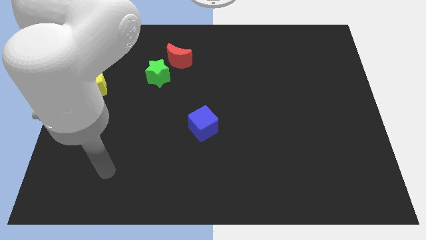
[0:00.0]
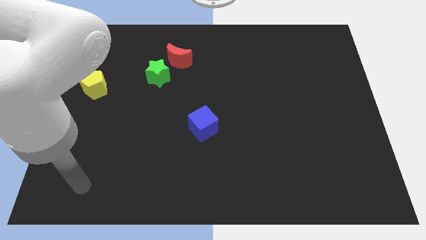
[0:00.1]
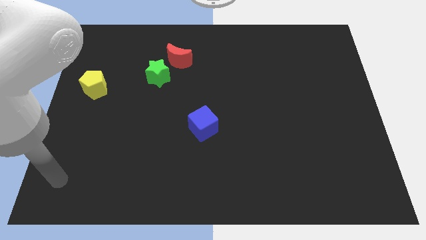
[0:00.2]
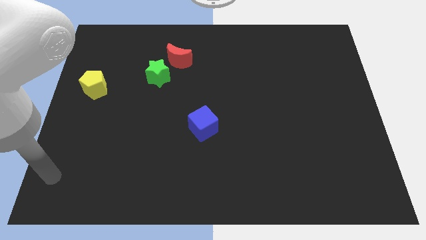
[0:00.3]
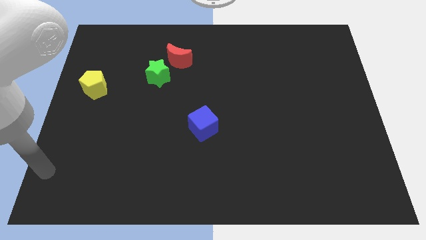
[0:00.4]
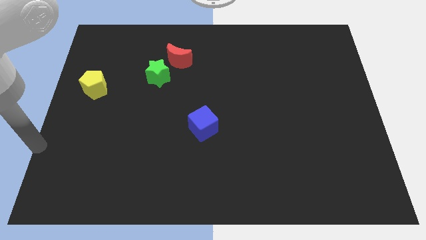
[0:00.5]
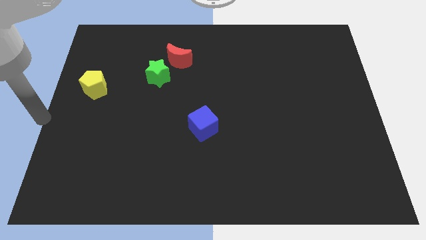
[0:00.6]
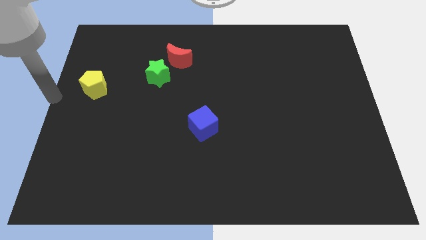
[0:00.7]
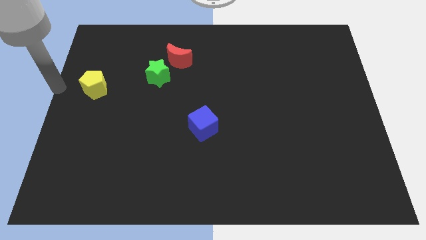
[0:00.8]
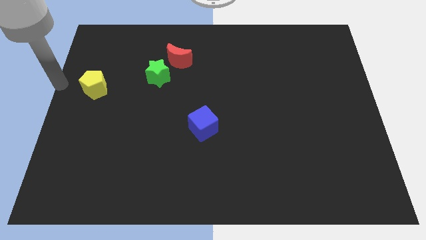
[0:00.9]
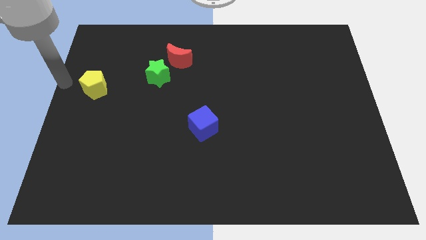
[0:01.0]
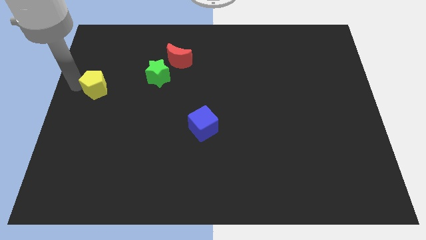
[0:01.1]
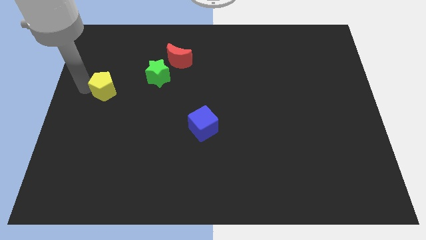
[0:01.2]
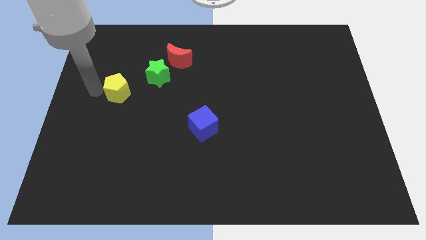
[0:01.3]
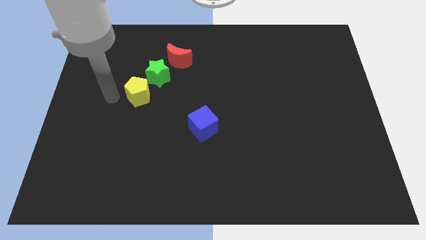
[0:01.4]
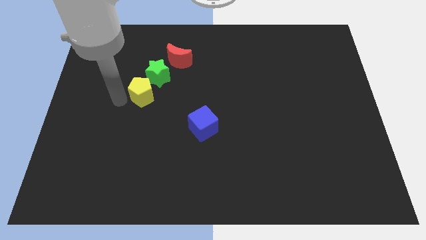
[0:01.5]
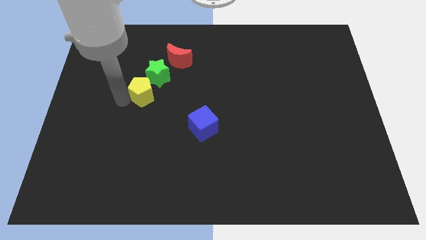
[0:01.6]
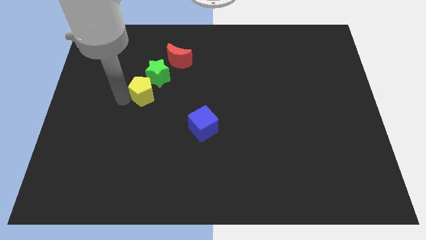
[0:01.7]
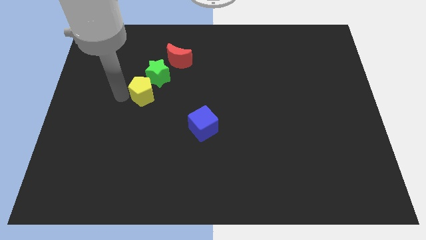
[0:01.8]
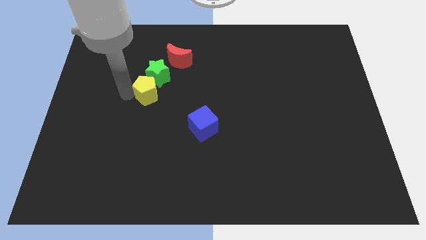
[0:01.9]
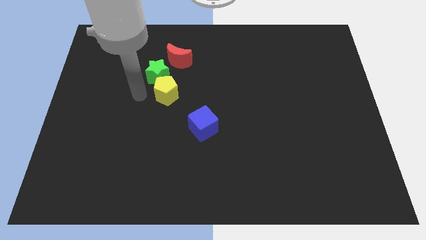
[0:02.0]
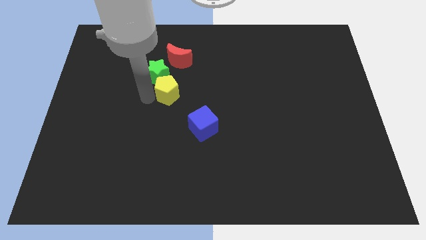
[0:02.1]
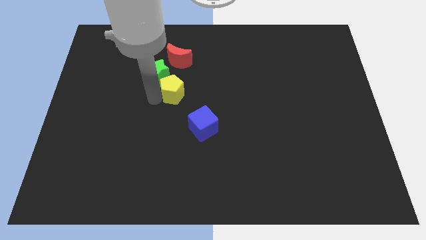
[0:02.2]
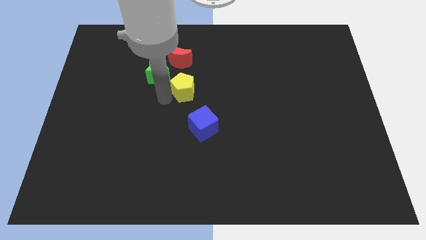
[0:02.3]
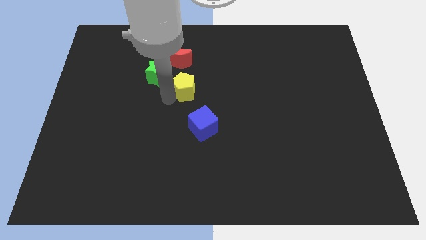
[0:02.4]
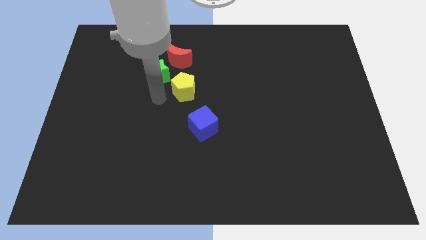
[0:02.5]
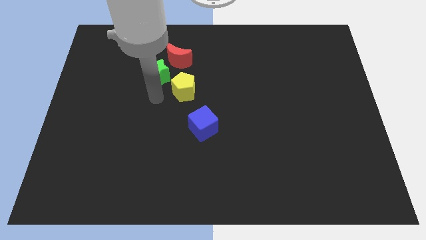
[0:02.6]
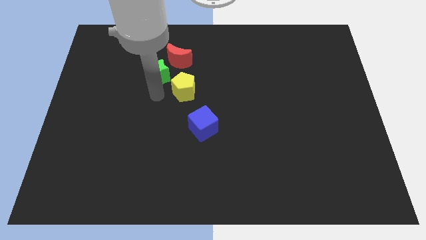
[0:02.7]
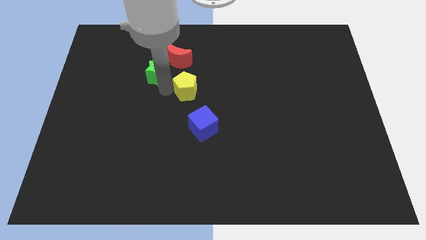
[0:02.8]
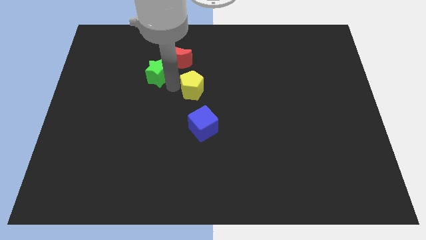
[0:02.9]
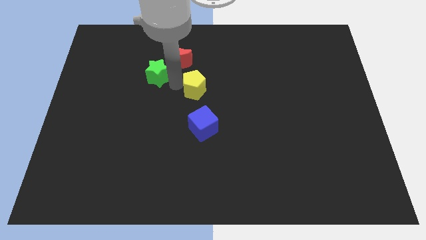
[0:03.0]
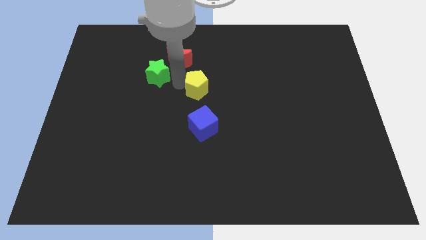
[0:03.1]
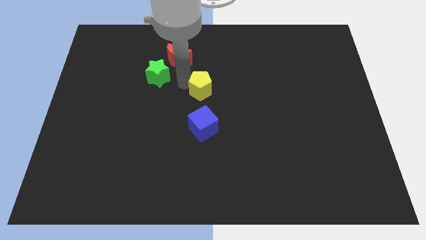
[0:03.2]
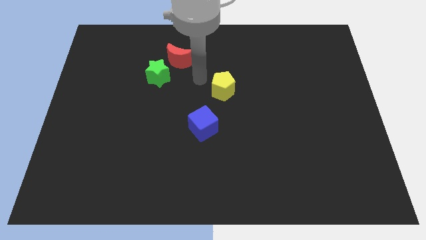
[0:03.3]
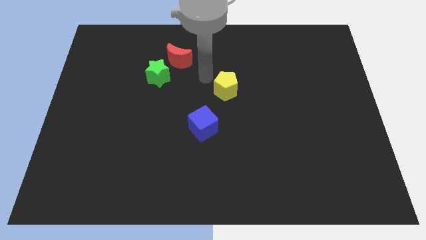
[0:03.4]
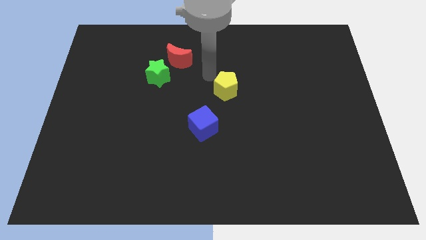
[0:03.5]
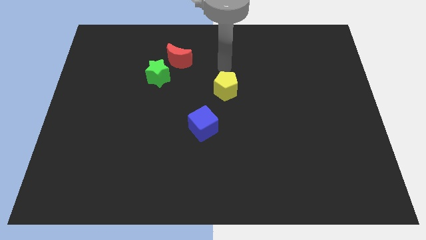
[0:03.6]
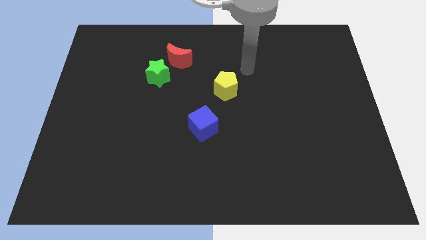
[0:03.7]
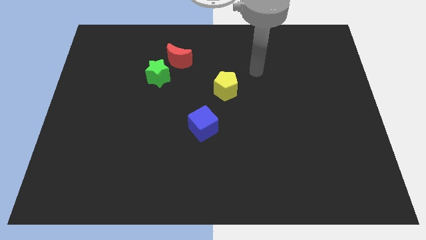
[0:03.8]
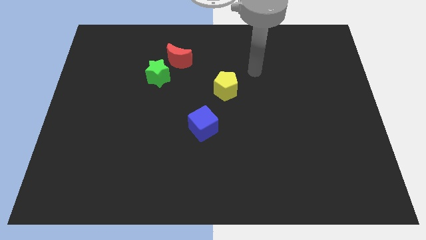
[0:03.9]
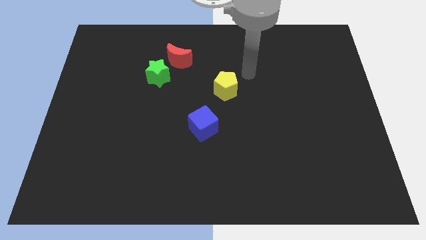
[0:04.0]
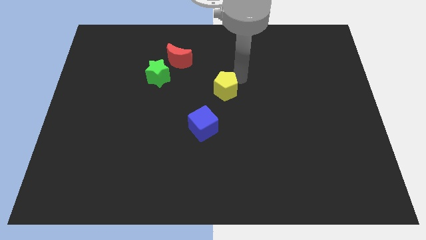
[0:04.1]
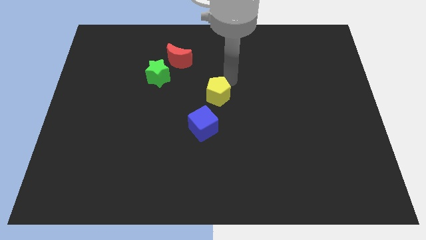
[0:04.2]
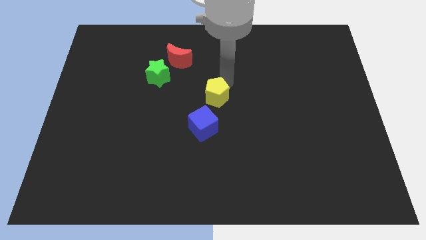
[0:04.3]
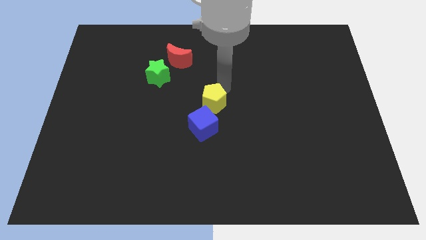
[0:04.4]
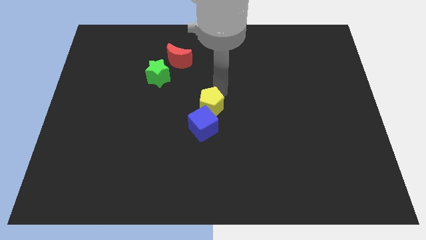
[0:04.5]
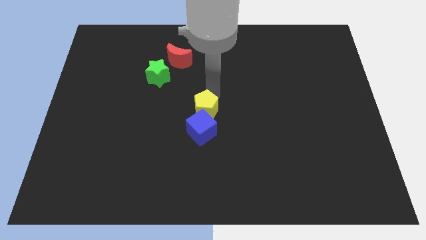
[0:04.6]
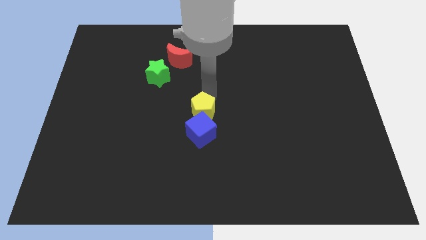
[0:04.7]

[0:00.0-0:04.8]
push the pentagon to the blue cube

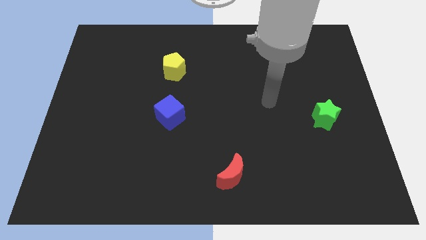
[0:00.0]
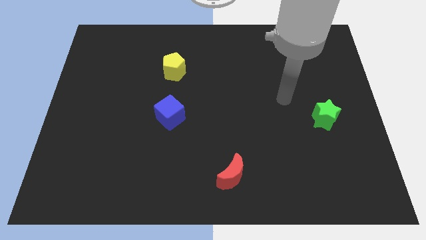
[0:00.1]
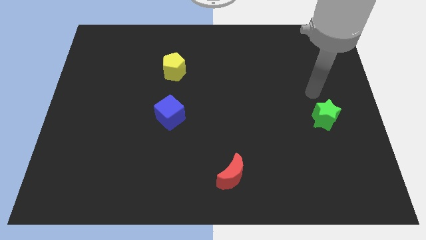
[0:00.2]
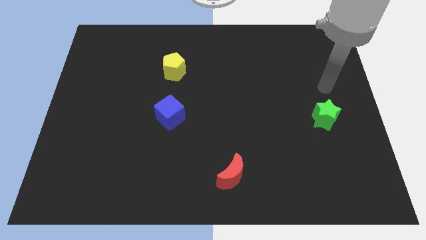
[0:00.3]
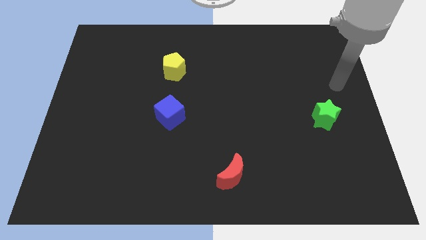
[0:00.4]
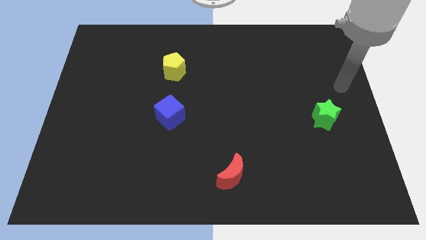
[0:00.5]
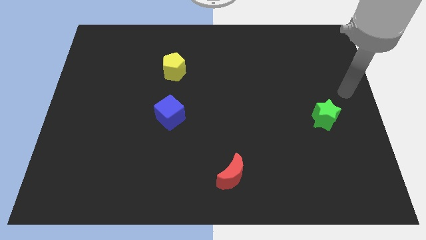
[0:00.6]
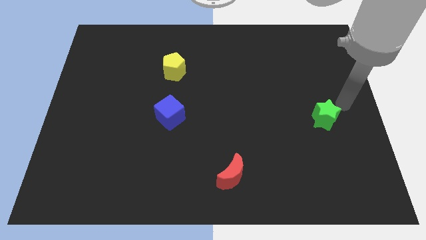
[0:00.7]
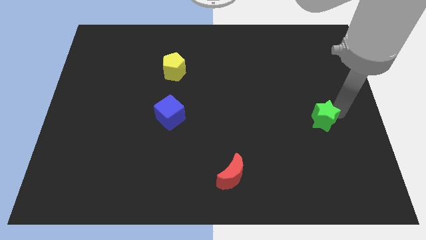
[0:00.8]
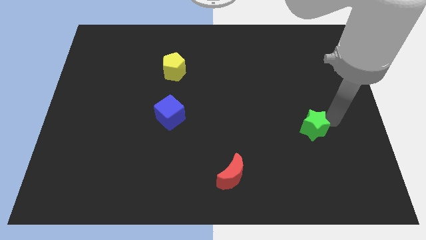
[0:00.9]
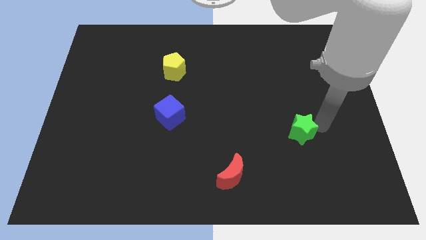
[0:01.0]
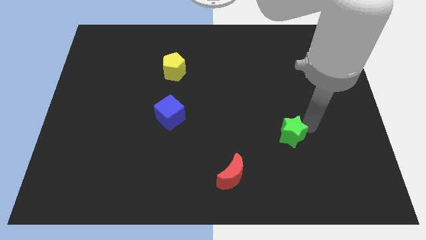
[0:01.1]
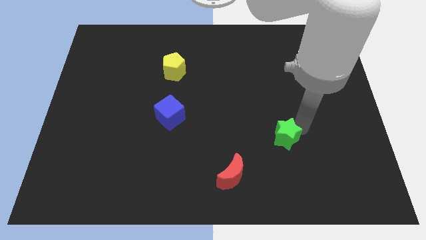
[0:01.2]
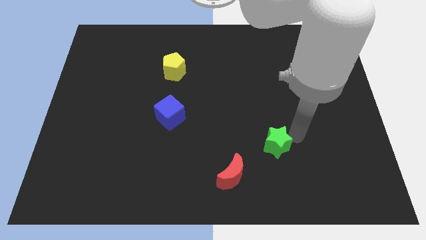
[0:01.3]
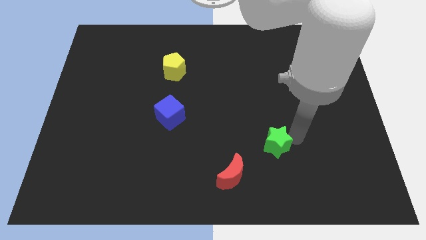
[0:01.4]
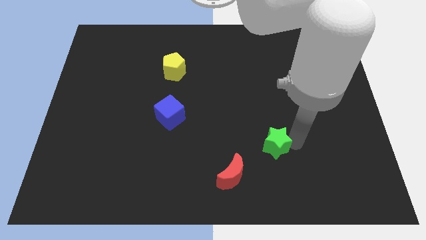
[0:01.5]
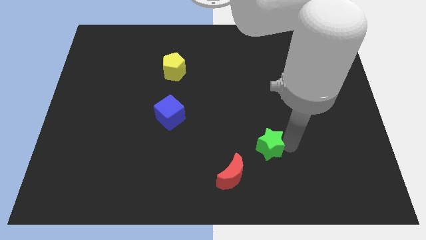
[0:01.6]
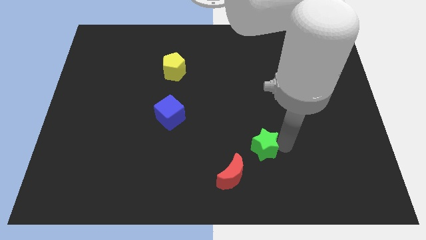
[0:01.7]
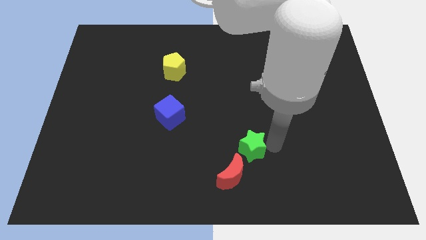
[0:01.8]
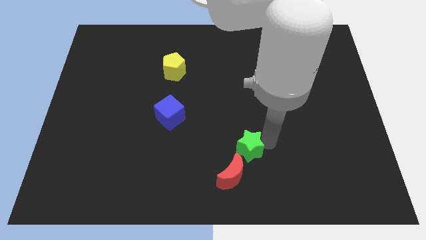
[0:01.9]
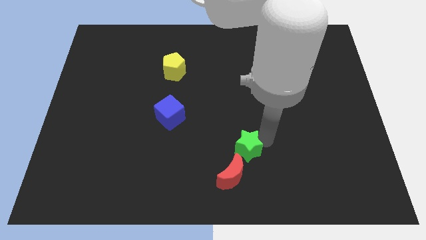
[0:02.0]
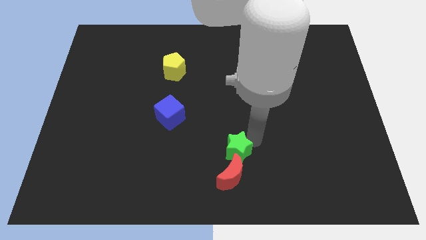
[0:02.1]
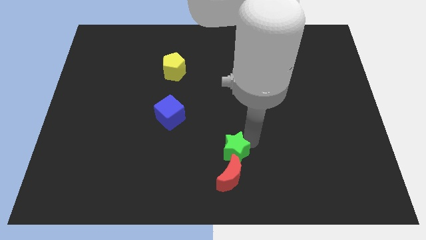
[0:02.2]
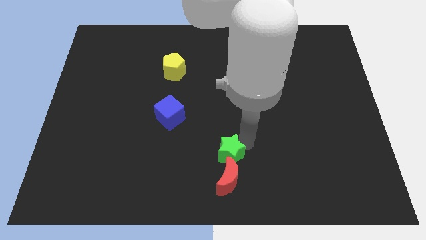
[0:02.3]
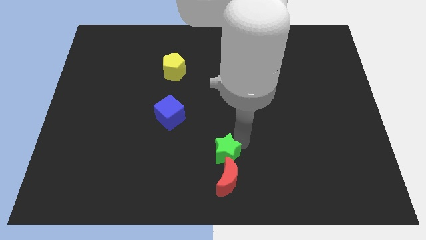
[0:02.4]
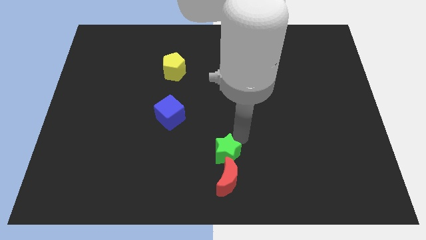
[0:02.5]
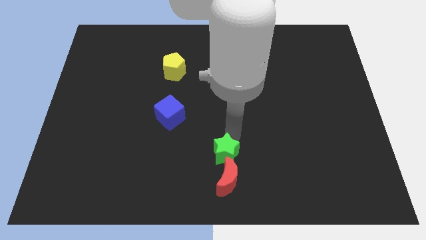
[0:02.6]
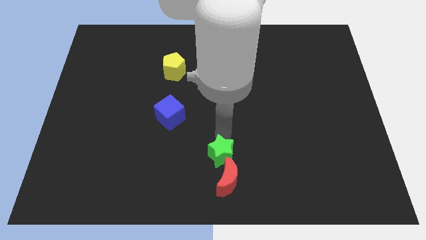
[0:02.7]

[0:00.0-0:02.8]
move the star towards the red block

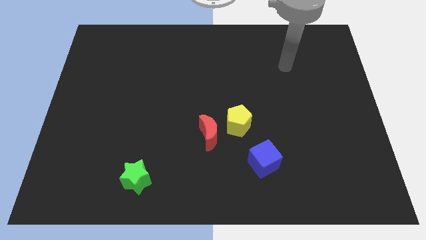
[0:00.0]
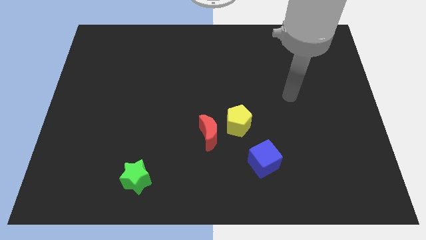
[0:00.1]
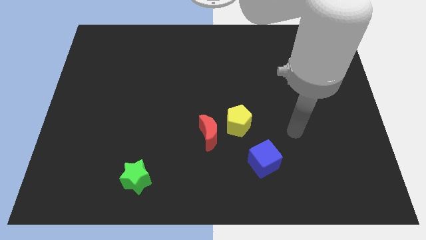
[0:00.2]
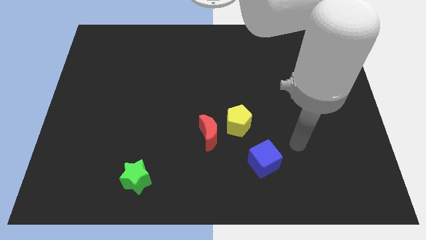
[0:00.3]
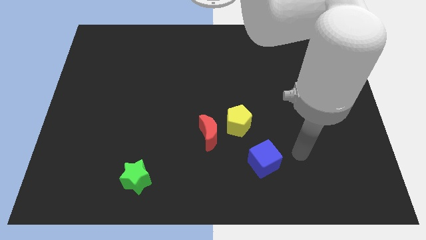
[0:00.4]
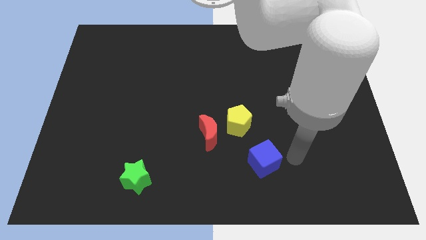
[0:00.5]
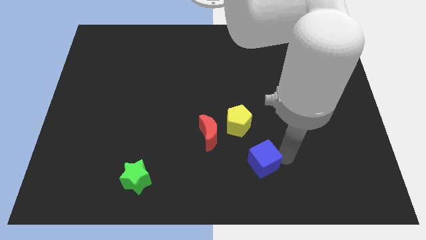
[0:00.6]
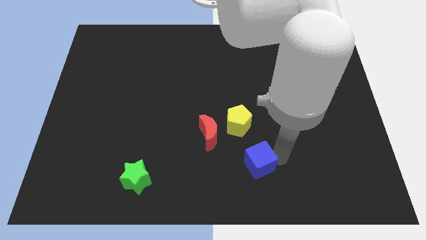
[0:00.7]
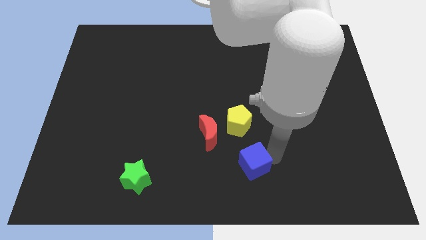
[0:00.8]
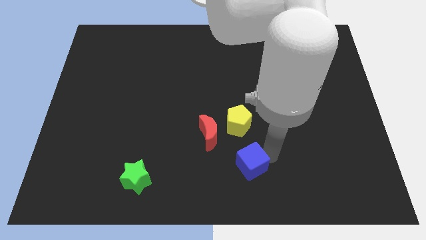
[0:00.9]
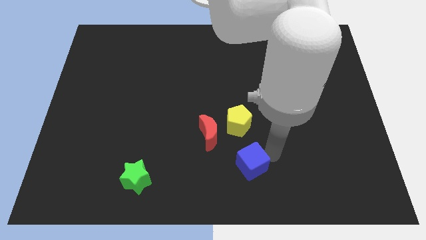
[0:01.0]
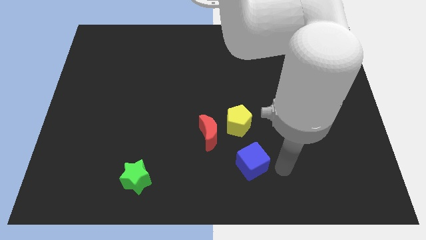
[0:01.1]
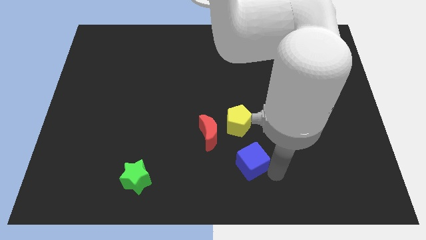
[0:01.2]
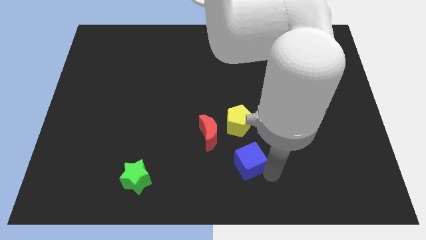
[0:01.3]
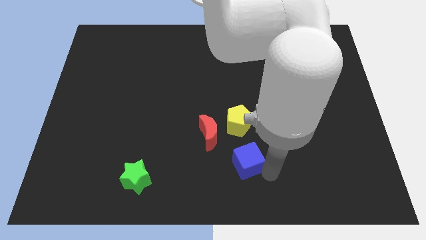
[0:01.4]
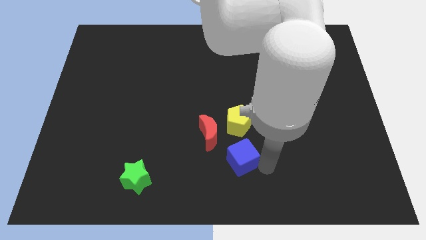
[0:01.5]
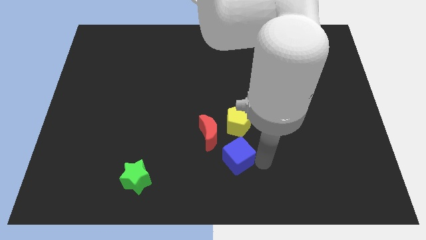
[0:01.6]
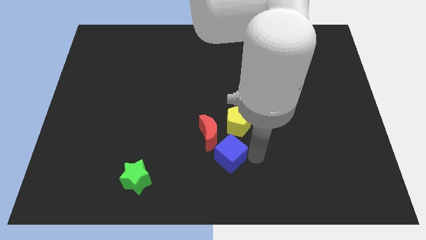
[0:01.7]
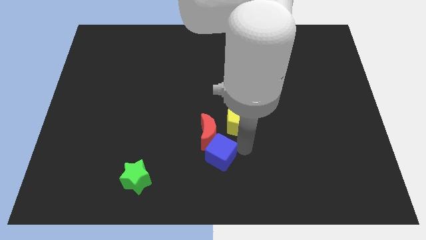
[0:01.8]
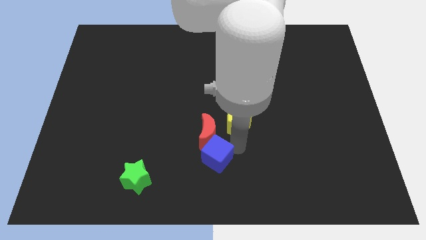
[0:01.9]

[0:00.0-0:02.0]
push the blue block next to the red moon
